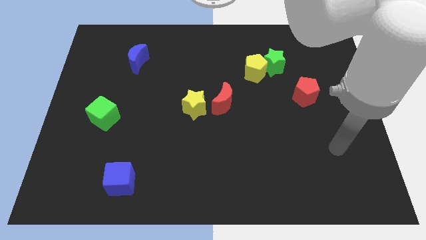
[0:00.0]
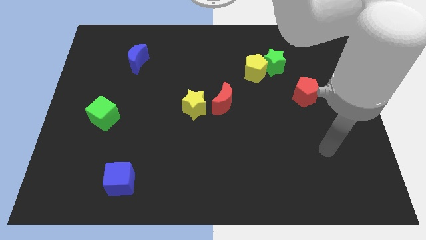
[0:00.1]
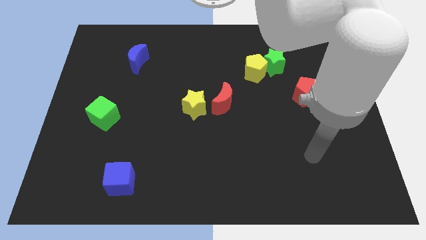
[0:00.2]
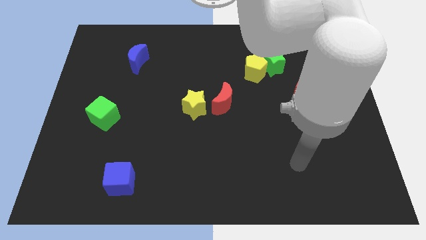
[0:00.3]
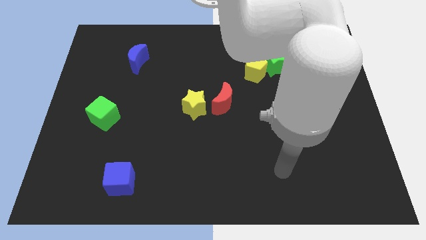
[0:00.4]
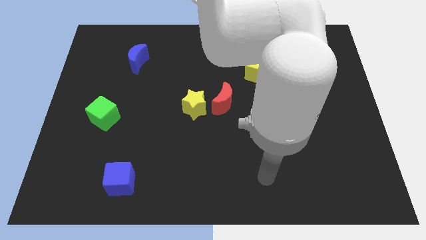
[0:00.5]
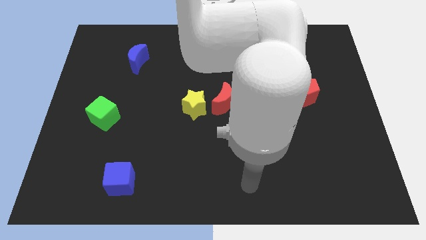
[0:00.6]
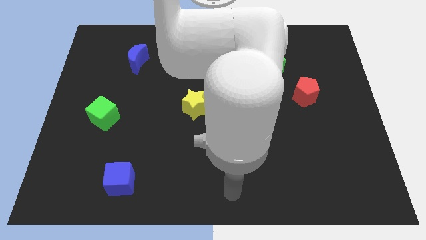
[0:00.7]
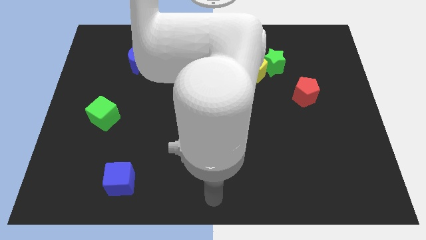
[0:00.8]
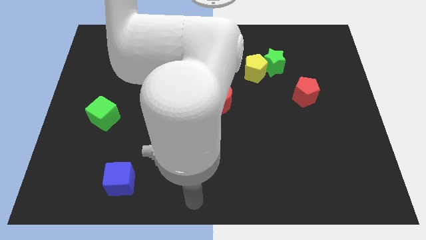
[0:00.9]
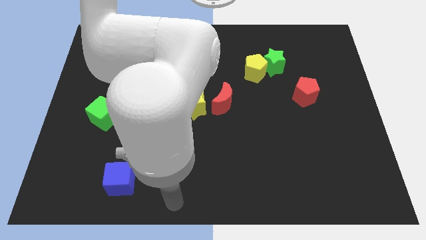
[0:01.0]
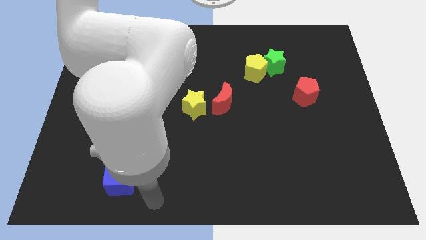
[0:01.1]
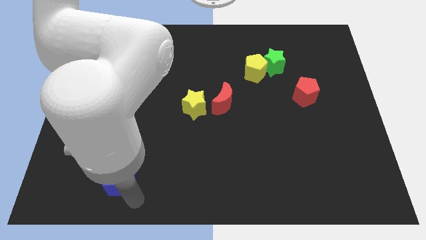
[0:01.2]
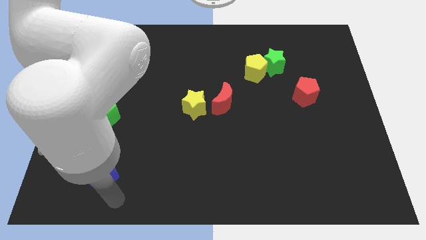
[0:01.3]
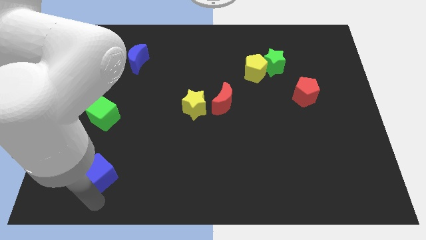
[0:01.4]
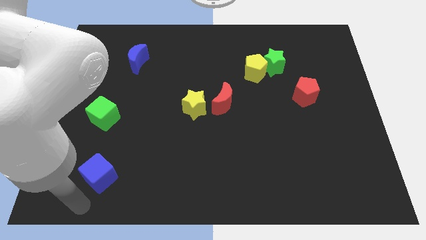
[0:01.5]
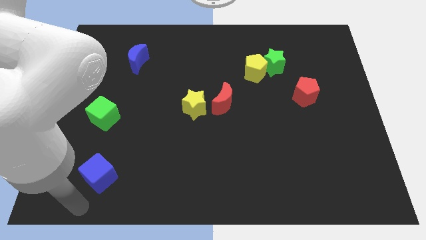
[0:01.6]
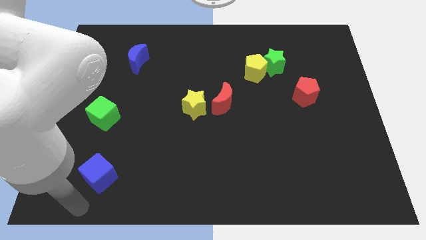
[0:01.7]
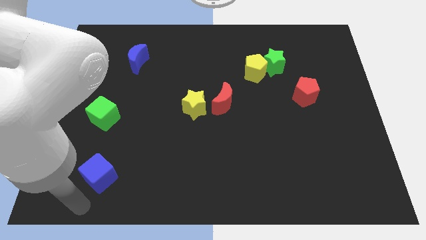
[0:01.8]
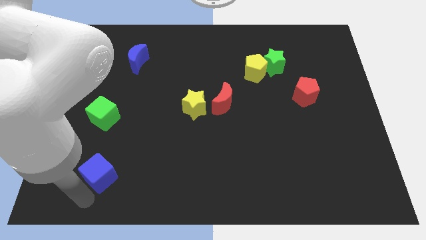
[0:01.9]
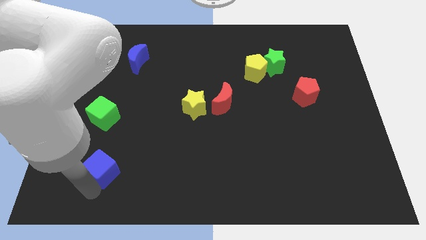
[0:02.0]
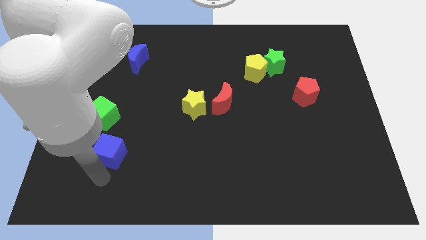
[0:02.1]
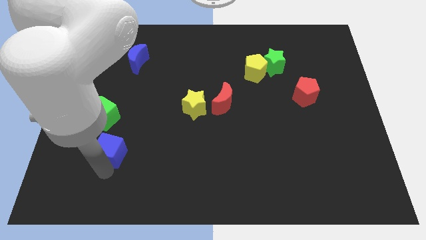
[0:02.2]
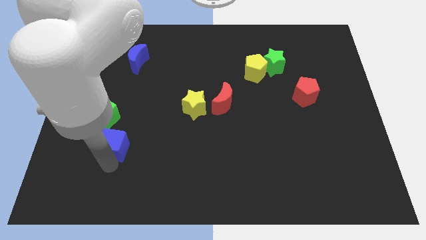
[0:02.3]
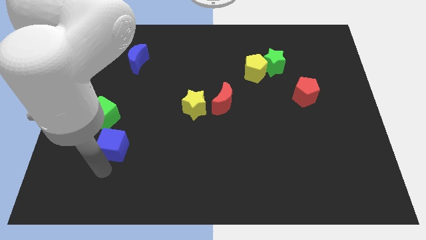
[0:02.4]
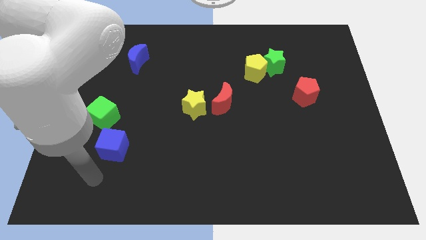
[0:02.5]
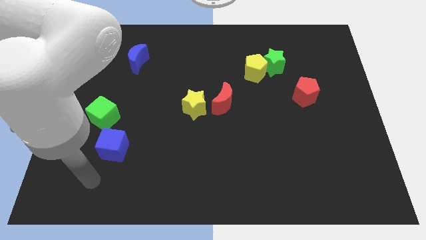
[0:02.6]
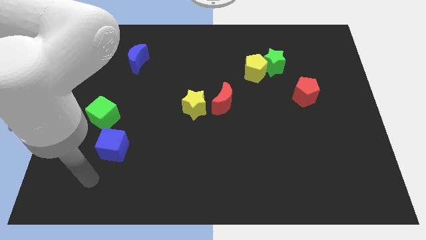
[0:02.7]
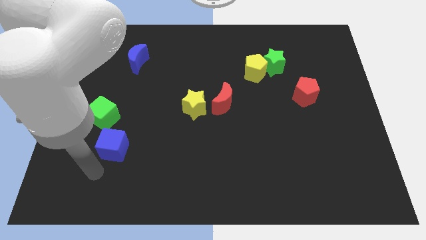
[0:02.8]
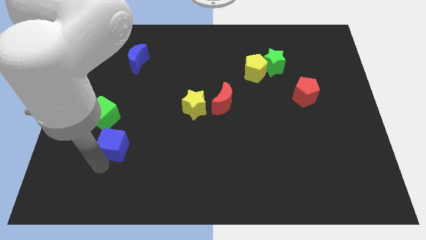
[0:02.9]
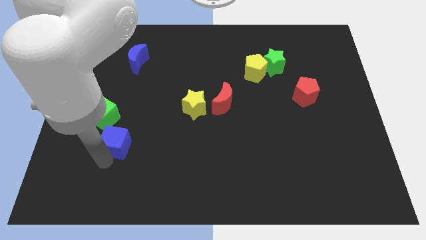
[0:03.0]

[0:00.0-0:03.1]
place the blue cube vertically below the green cube

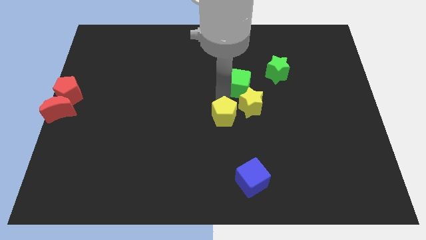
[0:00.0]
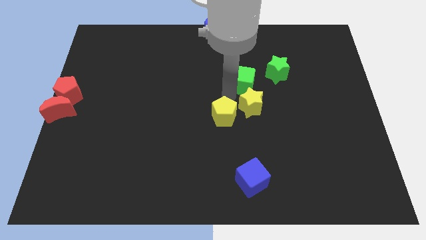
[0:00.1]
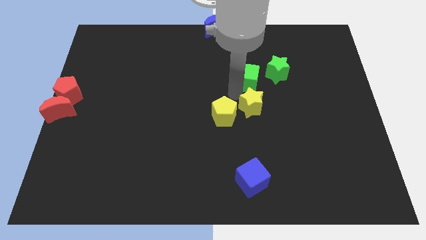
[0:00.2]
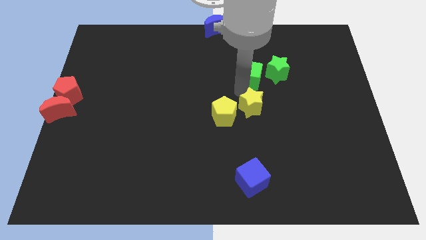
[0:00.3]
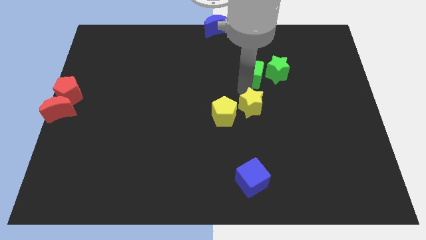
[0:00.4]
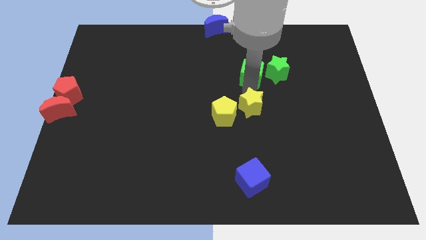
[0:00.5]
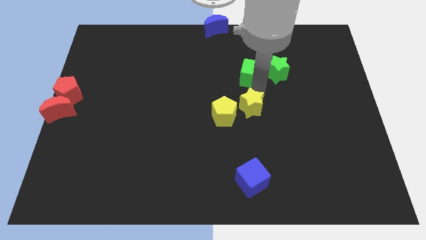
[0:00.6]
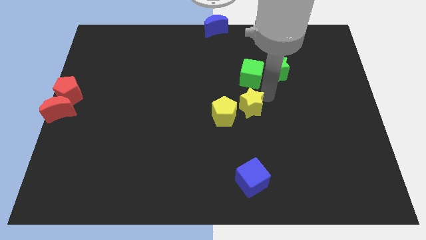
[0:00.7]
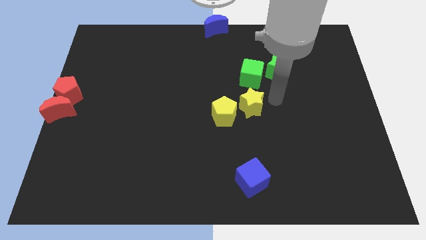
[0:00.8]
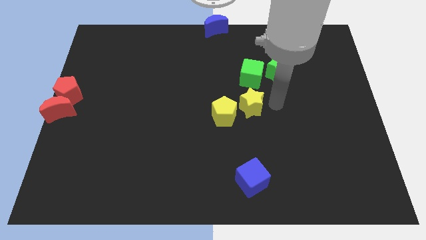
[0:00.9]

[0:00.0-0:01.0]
place green cube above yellow star

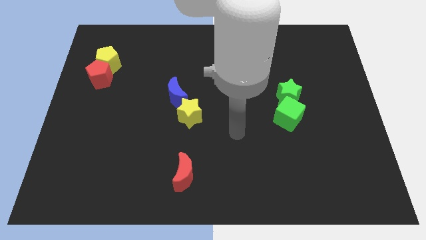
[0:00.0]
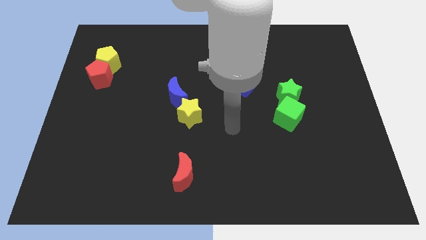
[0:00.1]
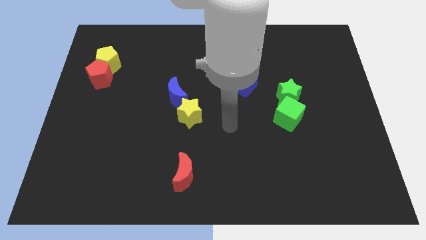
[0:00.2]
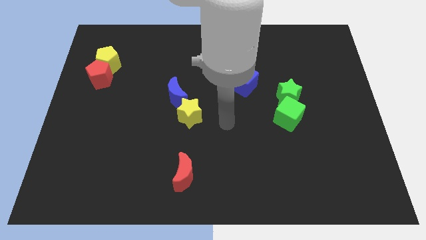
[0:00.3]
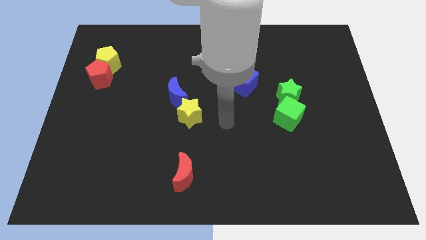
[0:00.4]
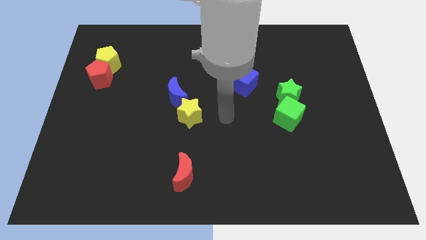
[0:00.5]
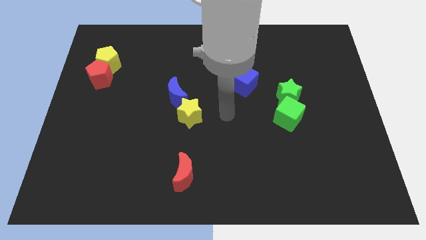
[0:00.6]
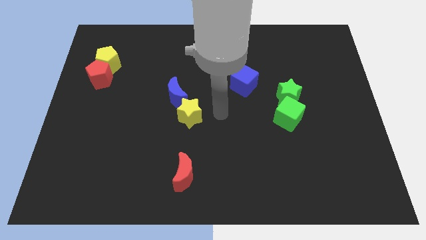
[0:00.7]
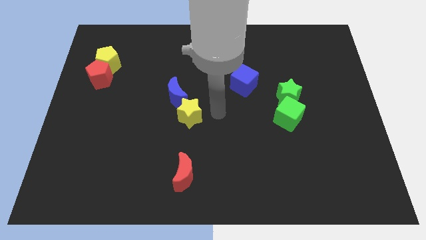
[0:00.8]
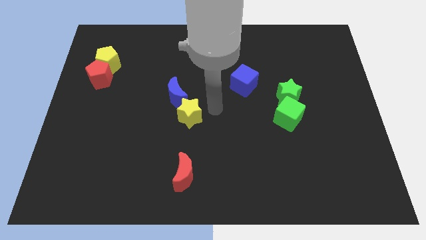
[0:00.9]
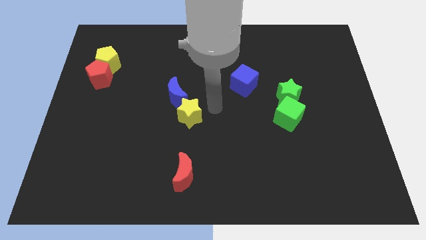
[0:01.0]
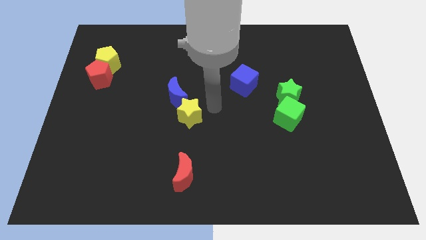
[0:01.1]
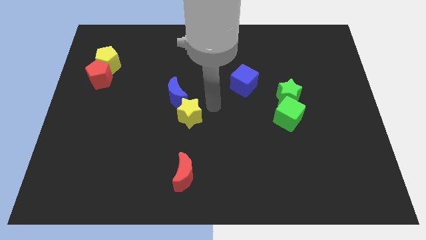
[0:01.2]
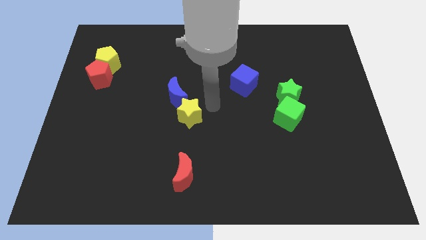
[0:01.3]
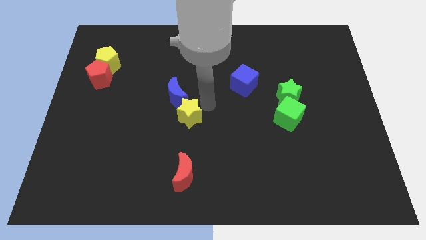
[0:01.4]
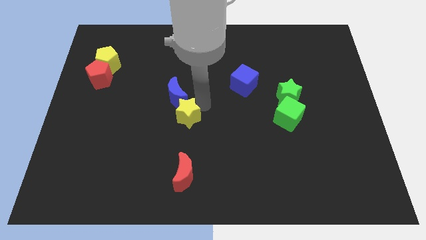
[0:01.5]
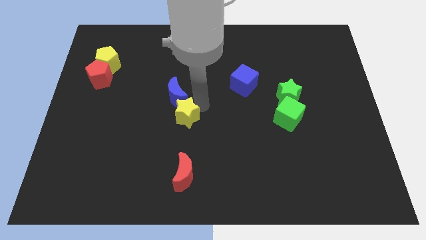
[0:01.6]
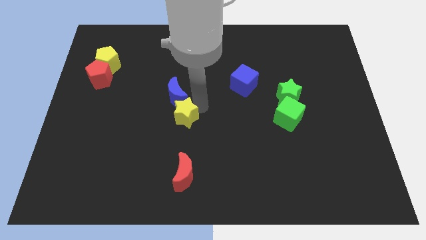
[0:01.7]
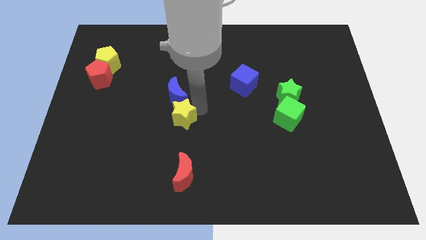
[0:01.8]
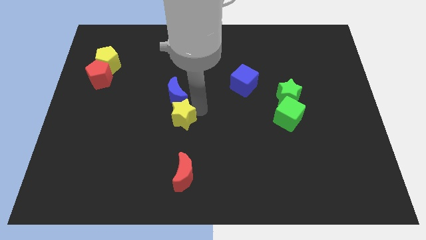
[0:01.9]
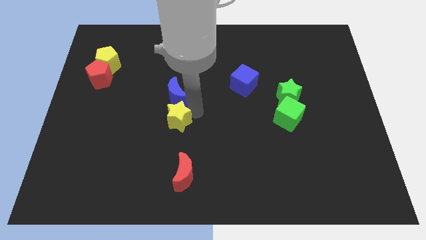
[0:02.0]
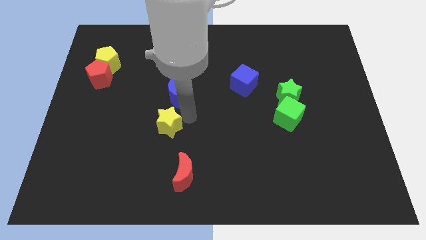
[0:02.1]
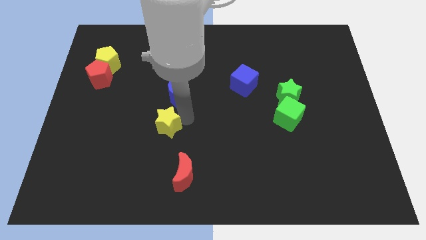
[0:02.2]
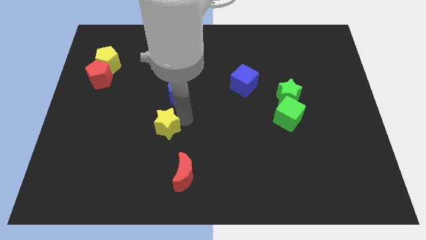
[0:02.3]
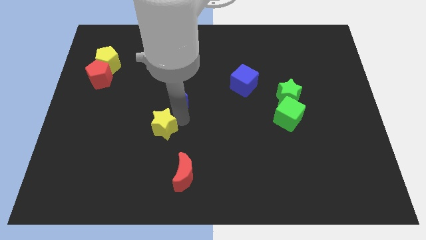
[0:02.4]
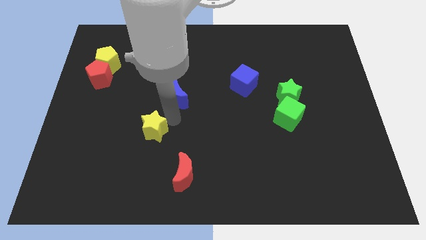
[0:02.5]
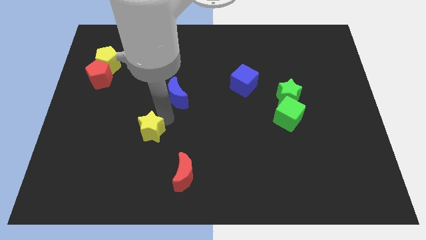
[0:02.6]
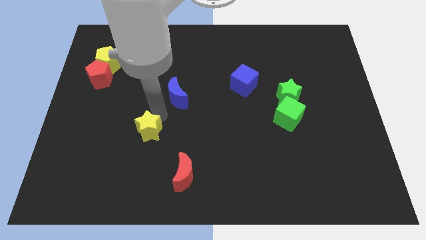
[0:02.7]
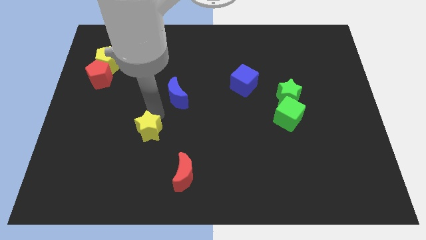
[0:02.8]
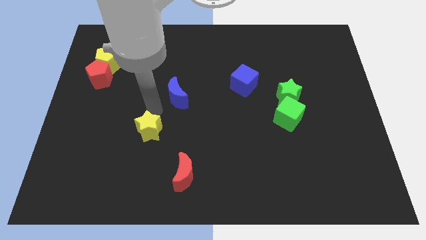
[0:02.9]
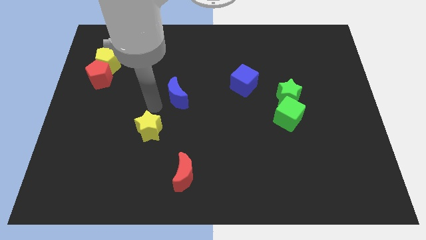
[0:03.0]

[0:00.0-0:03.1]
push the yellow star diagonal to the top of the red crescent

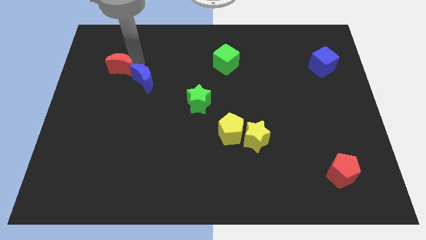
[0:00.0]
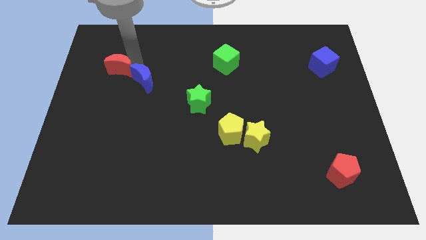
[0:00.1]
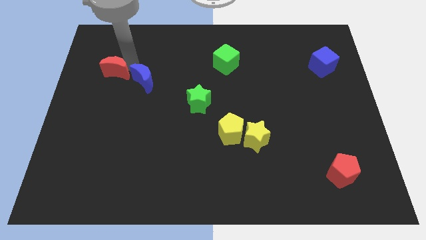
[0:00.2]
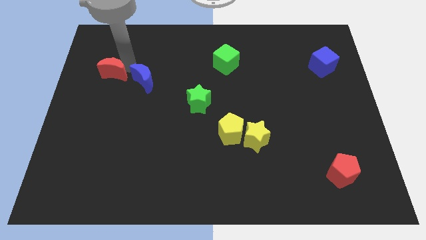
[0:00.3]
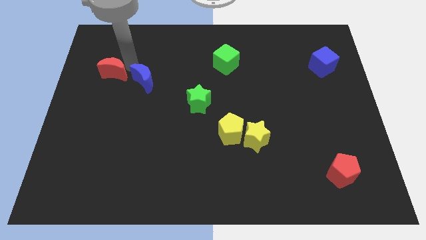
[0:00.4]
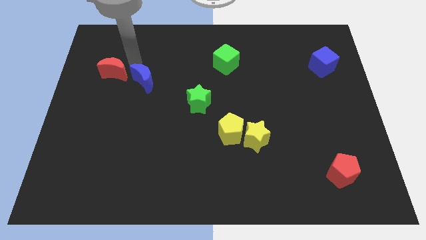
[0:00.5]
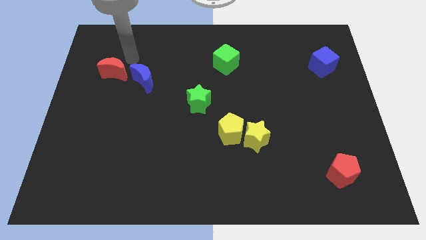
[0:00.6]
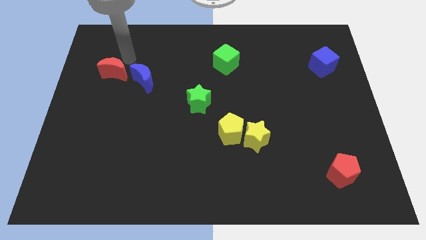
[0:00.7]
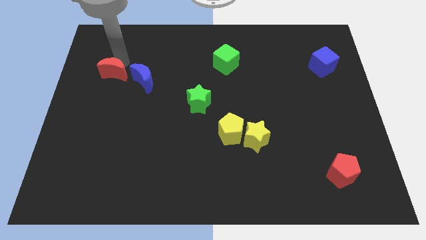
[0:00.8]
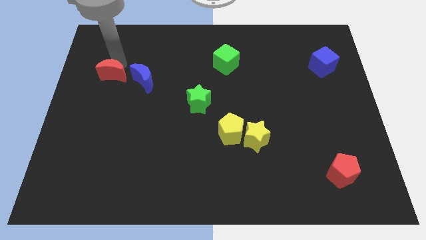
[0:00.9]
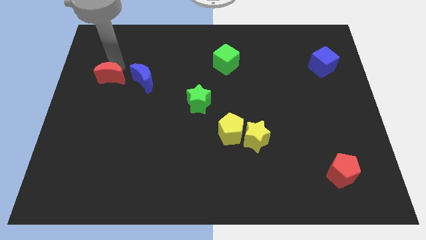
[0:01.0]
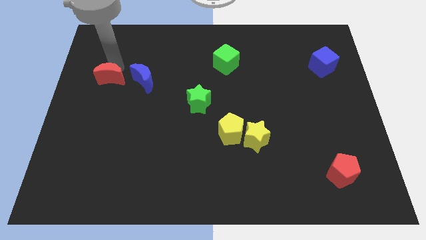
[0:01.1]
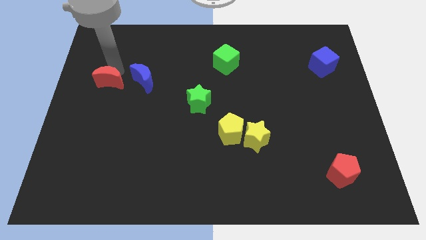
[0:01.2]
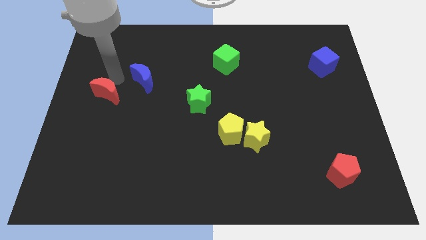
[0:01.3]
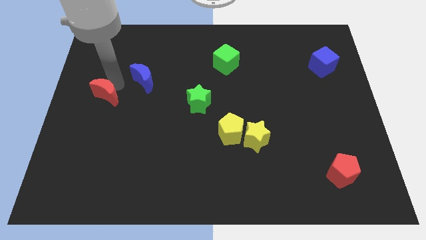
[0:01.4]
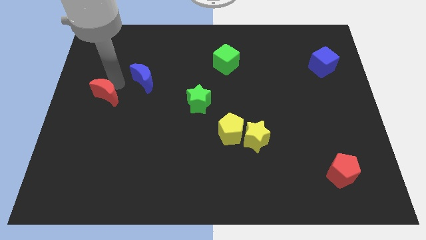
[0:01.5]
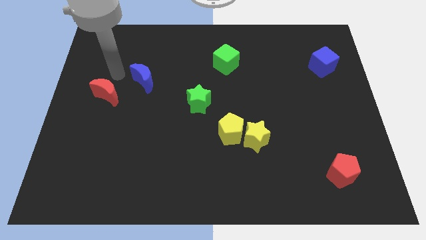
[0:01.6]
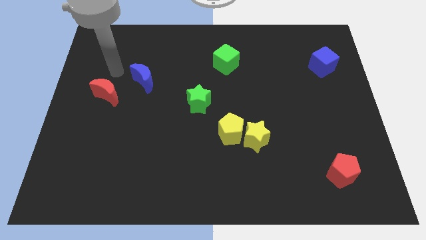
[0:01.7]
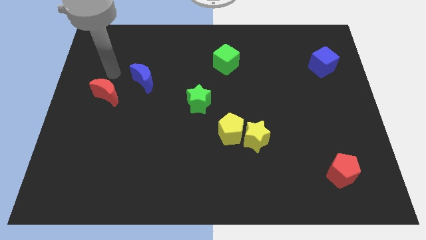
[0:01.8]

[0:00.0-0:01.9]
separate the red moon from the blue moon
